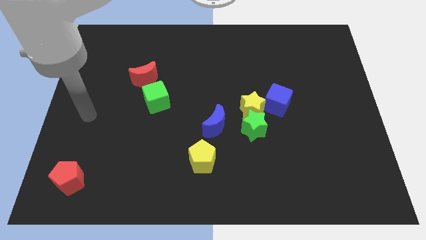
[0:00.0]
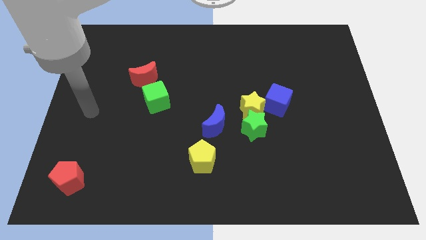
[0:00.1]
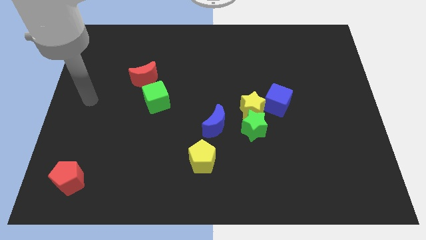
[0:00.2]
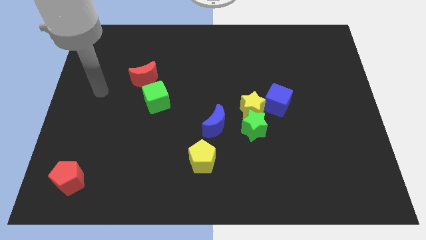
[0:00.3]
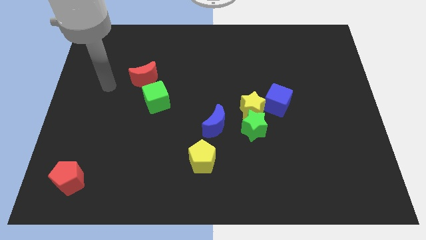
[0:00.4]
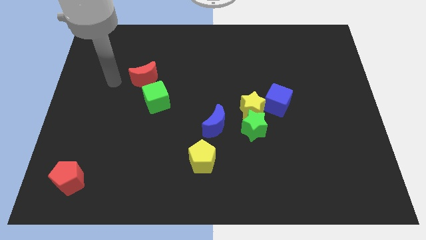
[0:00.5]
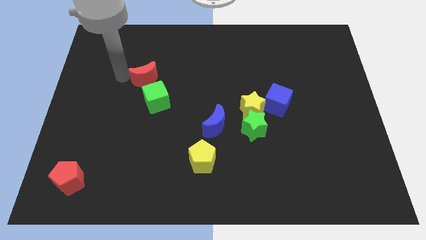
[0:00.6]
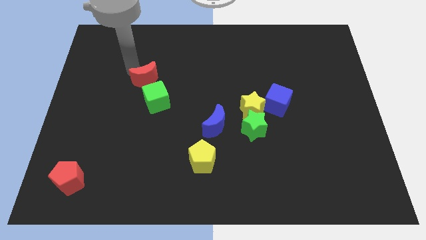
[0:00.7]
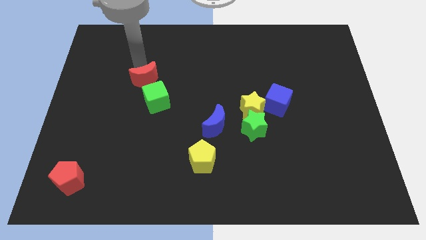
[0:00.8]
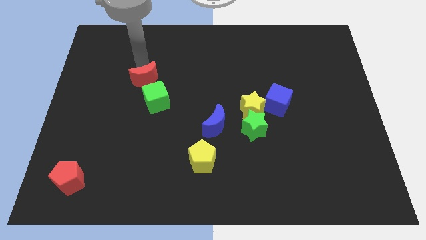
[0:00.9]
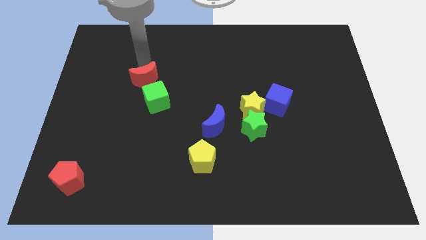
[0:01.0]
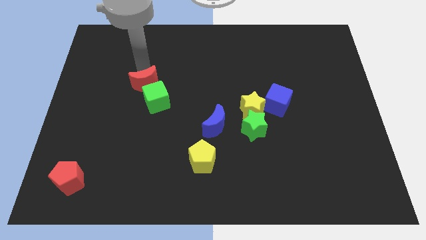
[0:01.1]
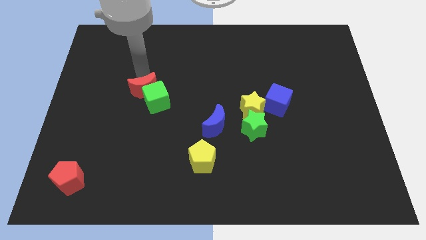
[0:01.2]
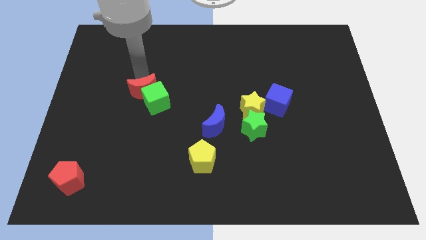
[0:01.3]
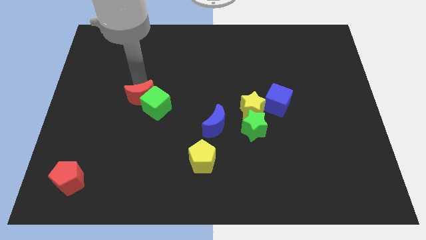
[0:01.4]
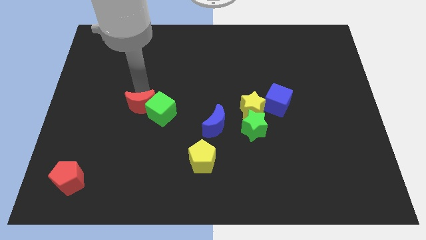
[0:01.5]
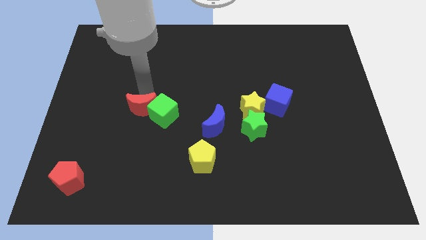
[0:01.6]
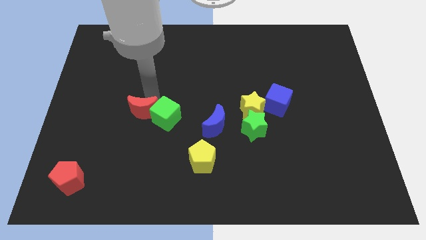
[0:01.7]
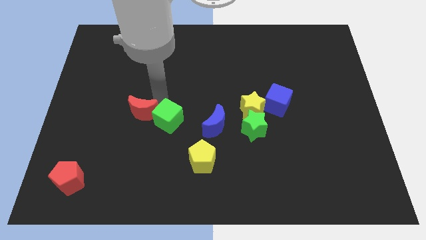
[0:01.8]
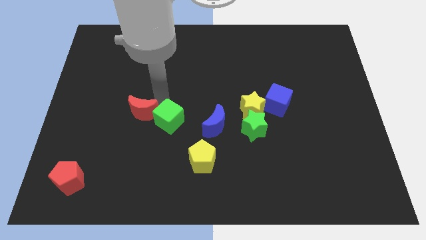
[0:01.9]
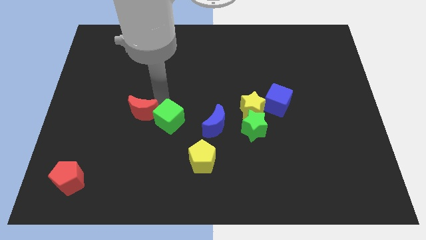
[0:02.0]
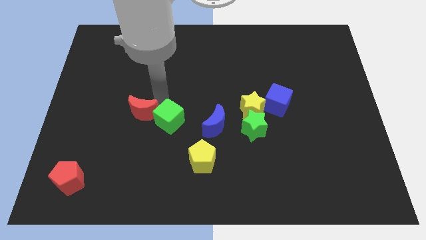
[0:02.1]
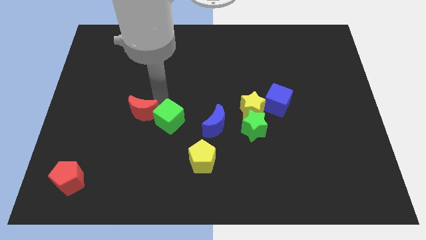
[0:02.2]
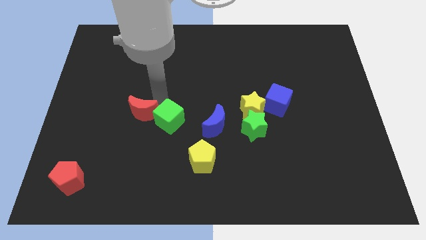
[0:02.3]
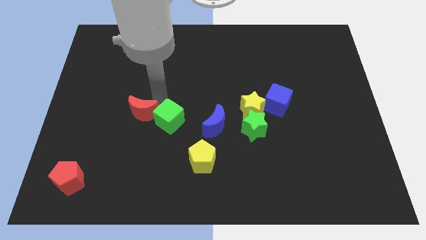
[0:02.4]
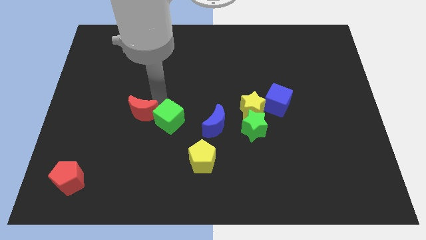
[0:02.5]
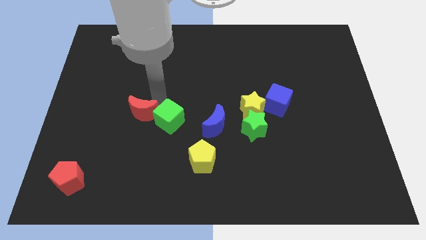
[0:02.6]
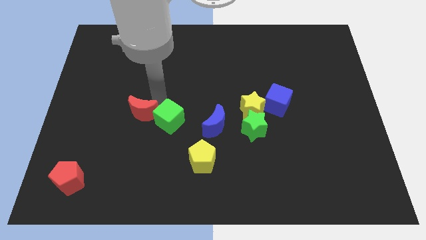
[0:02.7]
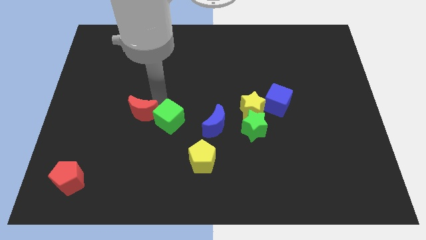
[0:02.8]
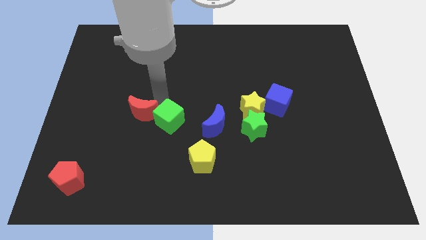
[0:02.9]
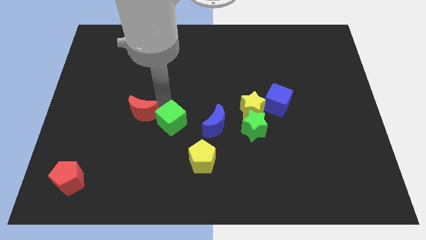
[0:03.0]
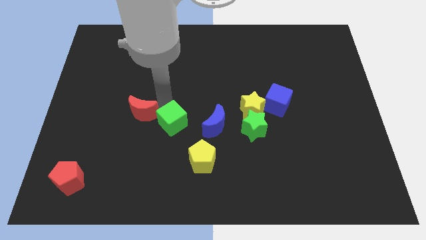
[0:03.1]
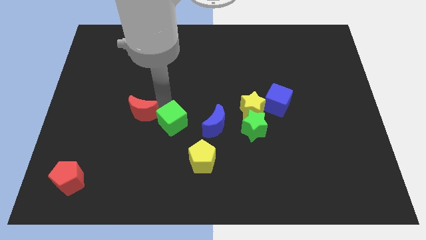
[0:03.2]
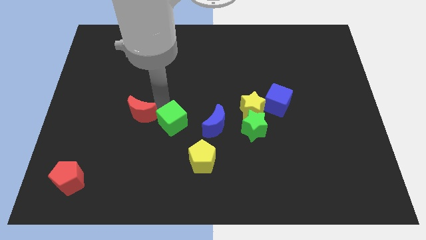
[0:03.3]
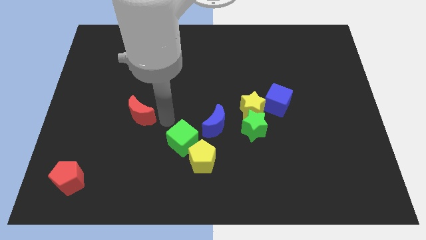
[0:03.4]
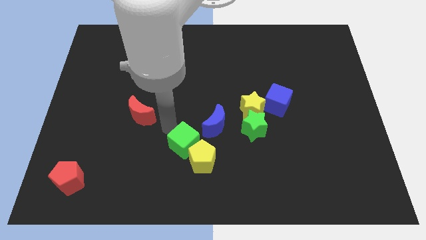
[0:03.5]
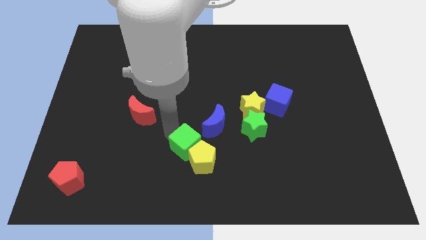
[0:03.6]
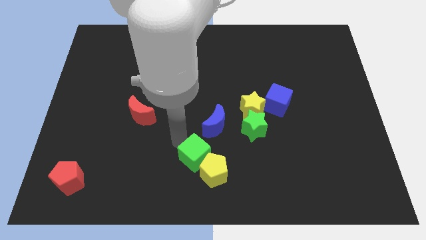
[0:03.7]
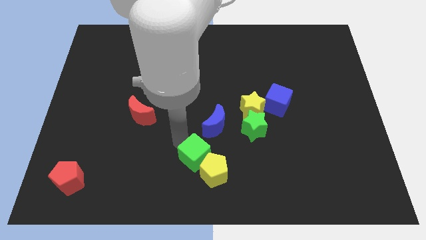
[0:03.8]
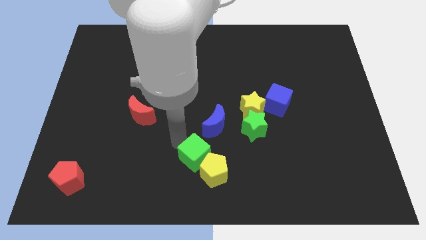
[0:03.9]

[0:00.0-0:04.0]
push the green cube into the yellow pentagon

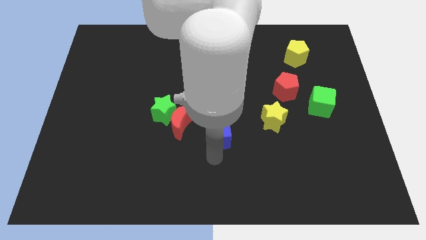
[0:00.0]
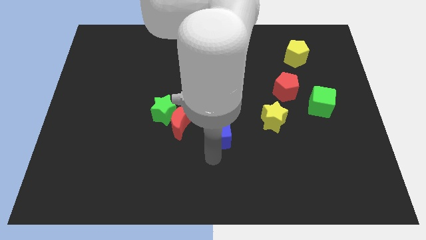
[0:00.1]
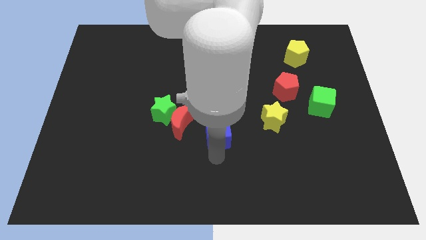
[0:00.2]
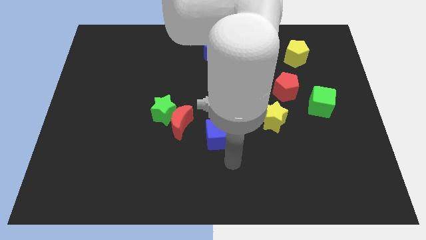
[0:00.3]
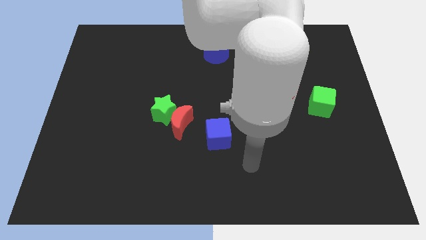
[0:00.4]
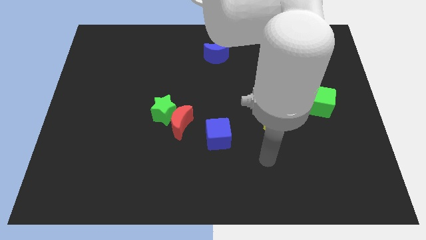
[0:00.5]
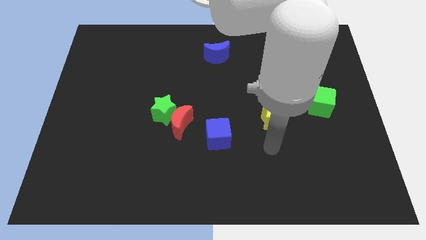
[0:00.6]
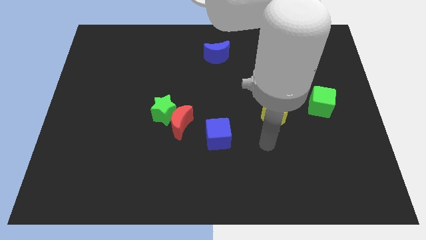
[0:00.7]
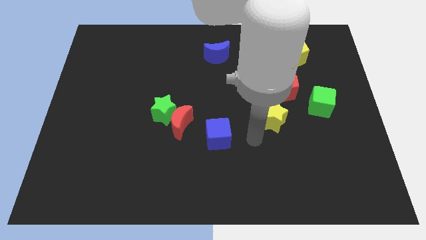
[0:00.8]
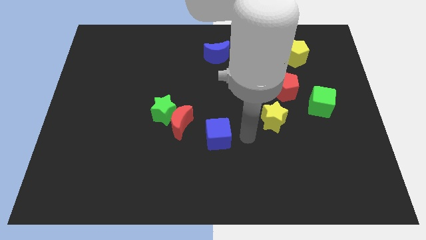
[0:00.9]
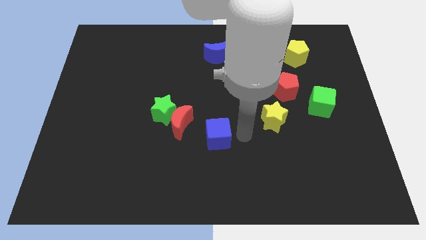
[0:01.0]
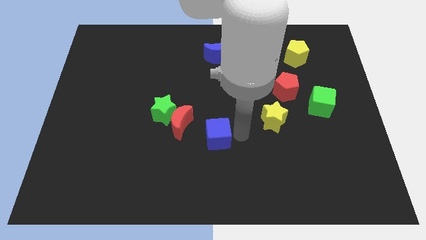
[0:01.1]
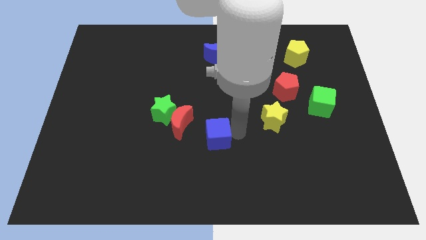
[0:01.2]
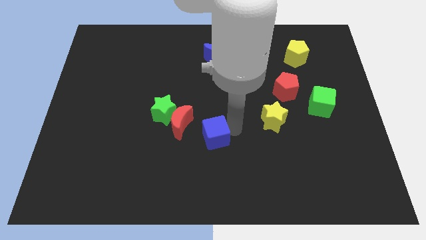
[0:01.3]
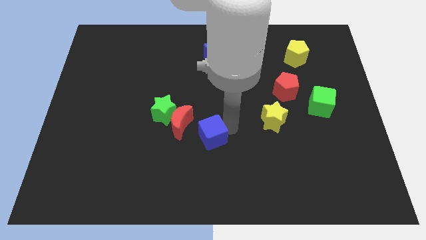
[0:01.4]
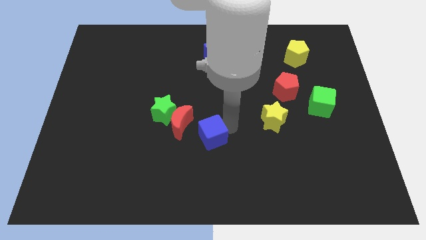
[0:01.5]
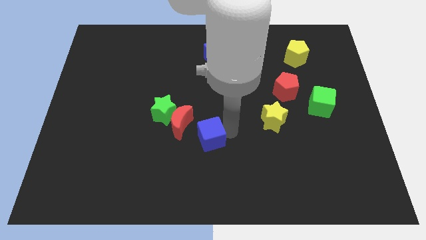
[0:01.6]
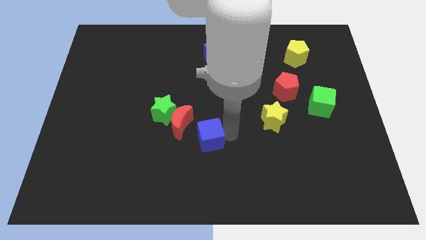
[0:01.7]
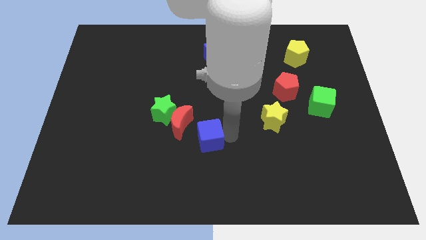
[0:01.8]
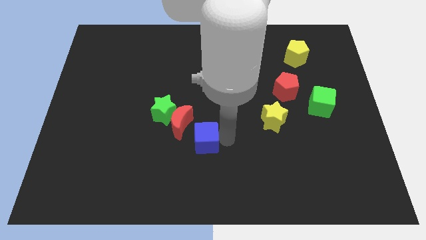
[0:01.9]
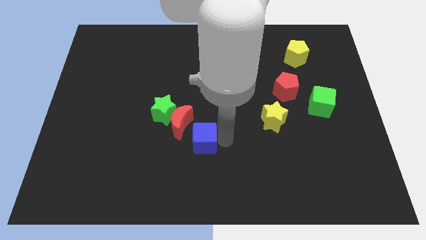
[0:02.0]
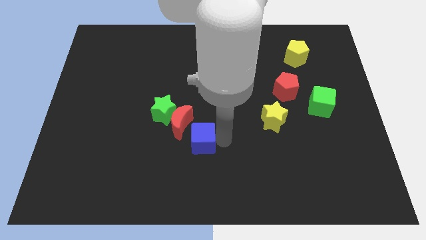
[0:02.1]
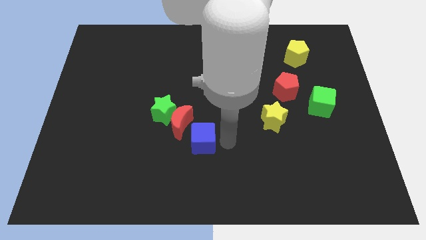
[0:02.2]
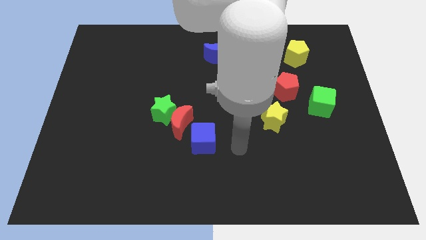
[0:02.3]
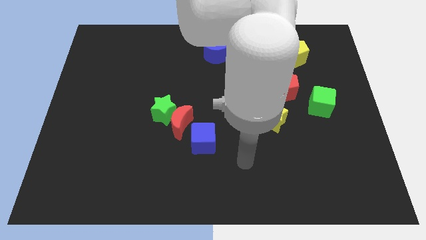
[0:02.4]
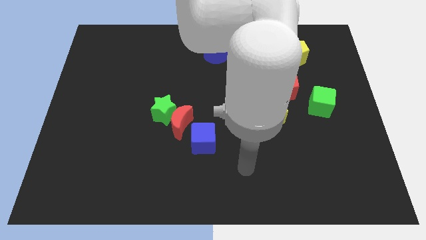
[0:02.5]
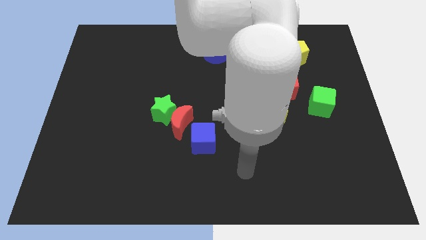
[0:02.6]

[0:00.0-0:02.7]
move the blue cube towards the bottom right side of red moon

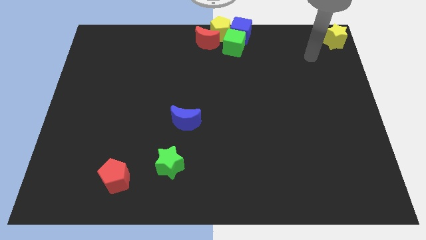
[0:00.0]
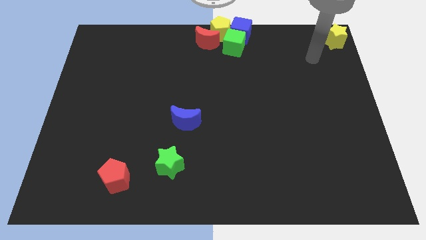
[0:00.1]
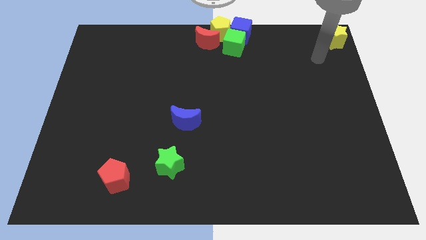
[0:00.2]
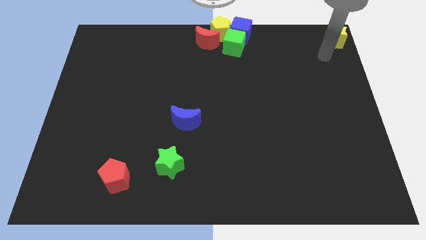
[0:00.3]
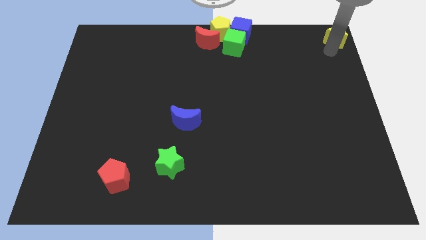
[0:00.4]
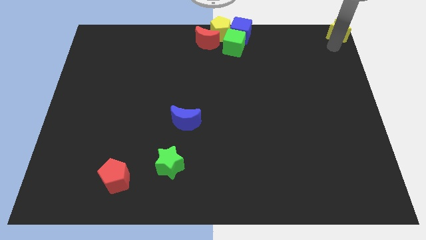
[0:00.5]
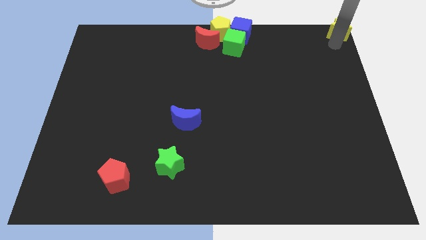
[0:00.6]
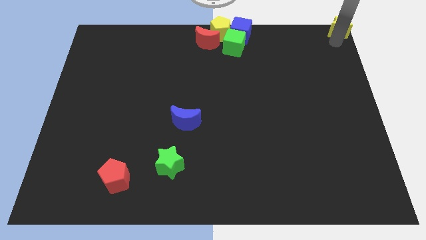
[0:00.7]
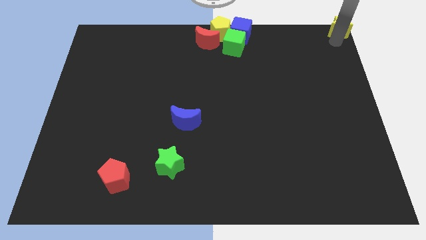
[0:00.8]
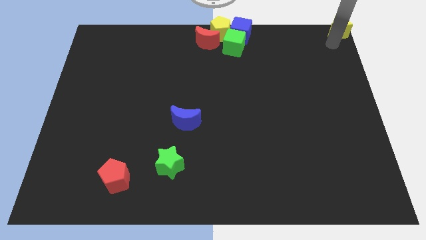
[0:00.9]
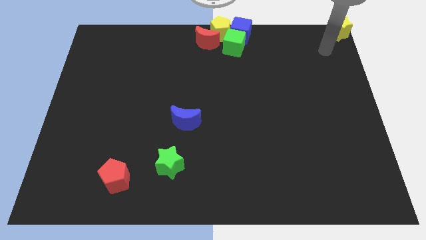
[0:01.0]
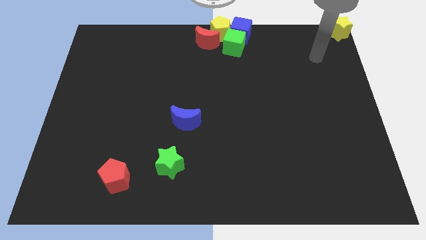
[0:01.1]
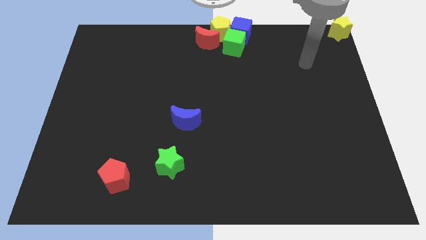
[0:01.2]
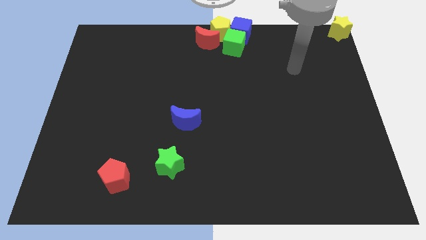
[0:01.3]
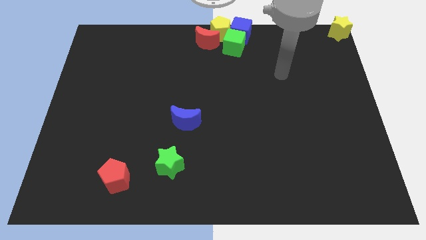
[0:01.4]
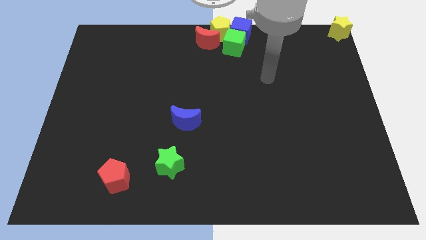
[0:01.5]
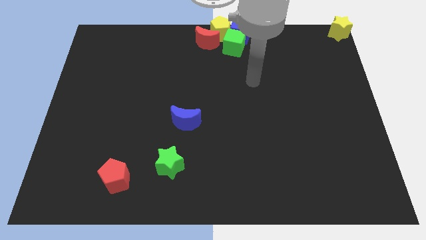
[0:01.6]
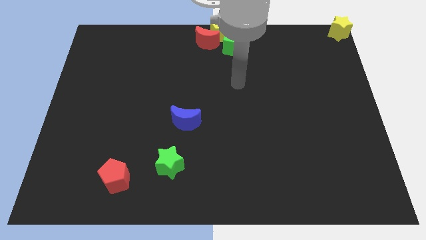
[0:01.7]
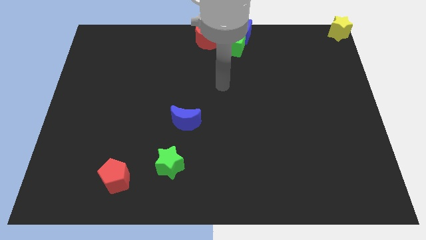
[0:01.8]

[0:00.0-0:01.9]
move yourself away from the yellow star

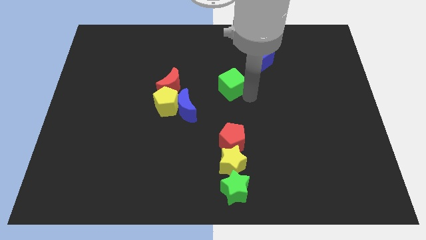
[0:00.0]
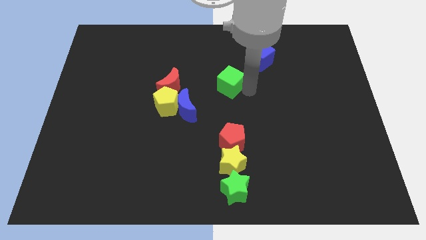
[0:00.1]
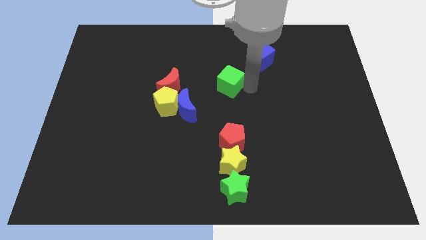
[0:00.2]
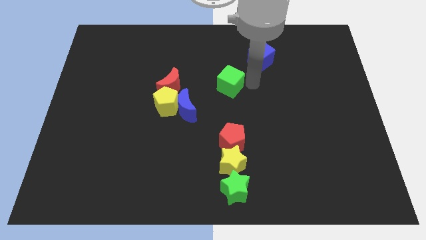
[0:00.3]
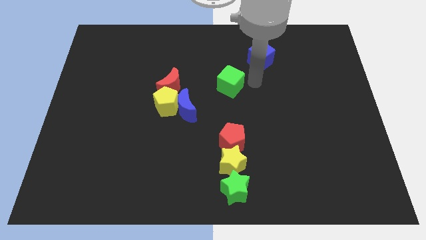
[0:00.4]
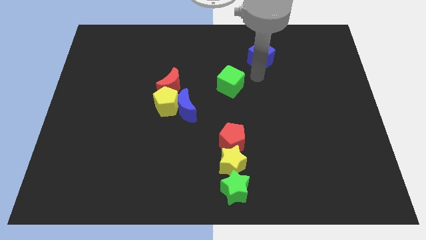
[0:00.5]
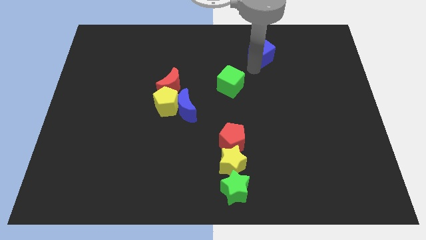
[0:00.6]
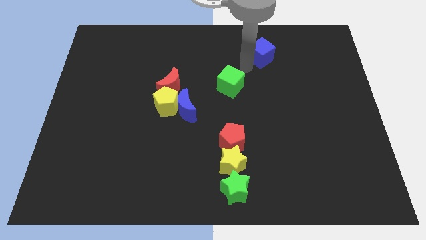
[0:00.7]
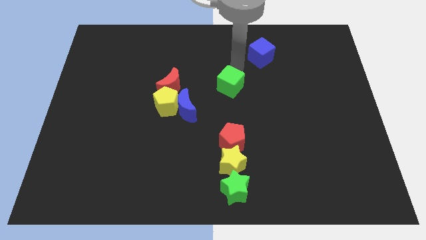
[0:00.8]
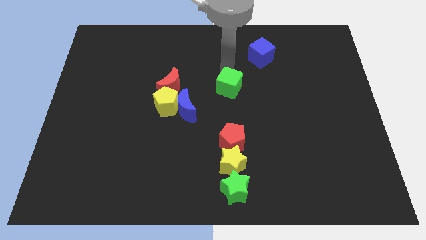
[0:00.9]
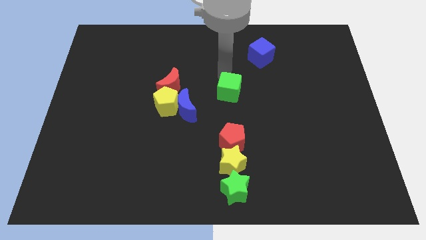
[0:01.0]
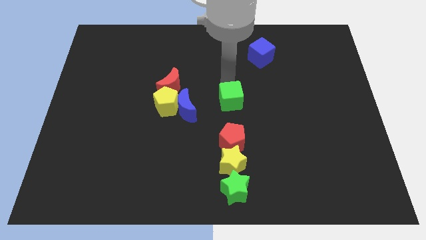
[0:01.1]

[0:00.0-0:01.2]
point your arm above green cube
